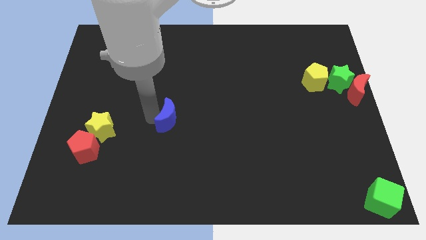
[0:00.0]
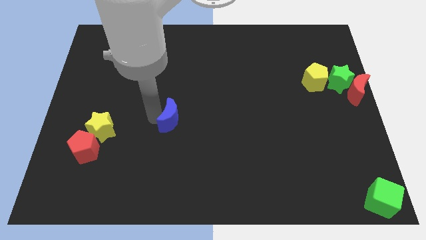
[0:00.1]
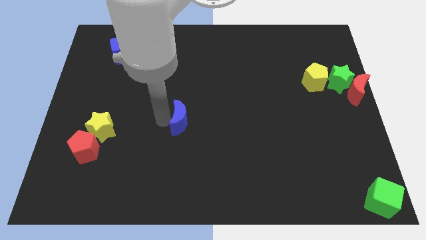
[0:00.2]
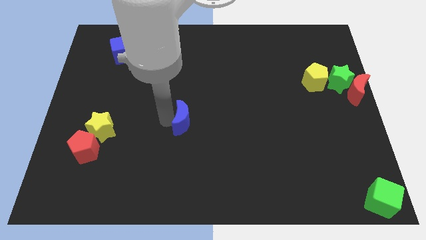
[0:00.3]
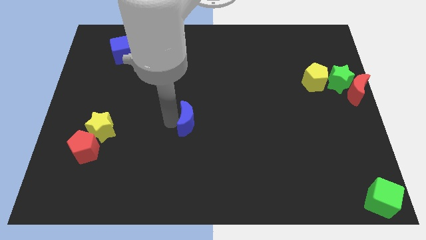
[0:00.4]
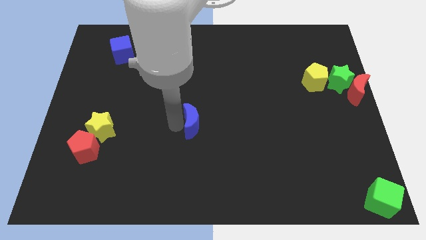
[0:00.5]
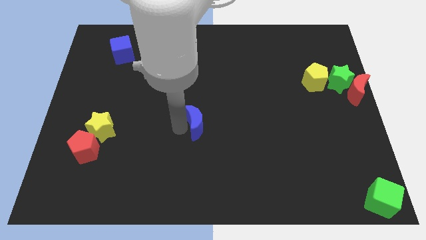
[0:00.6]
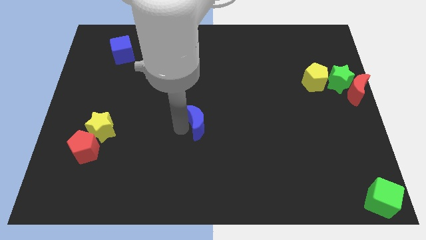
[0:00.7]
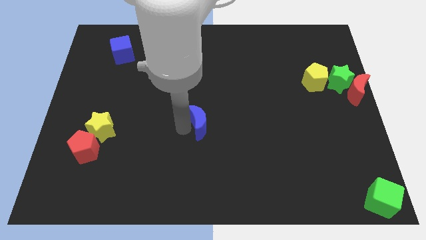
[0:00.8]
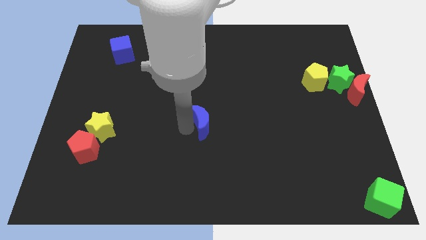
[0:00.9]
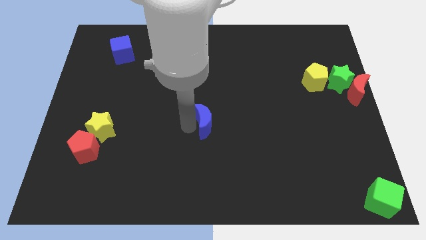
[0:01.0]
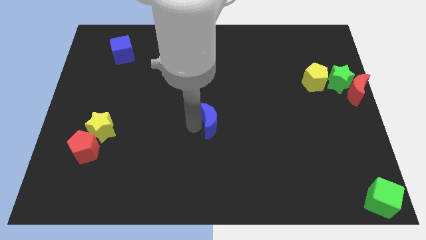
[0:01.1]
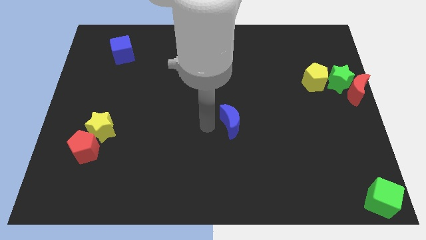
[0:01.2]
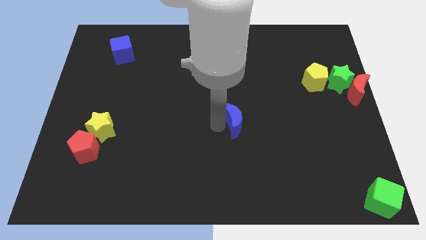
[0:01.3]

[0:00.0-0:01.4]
place the blue moon at the center of the board

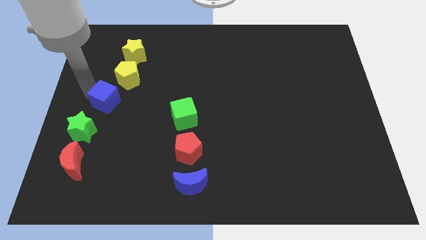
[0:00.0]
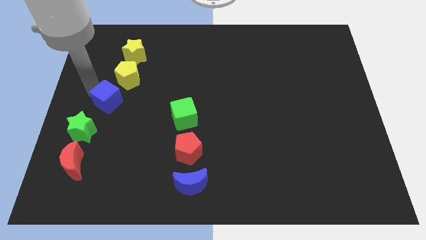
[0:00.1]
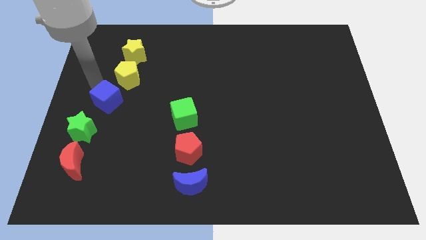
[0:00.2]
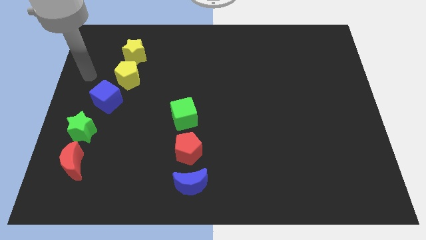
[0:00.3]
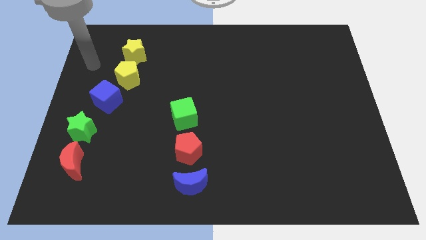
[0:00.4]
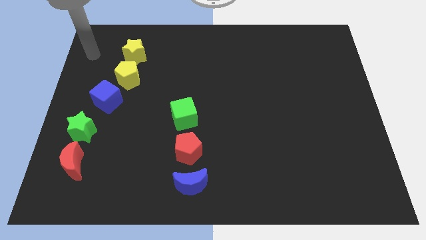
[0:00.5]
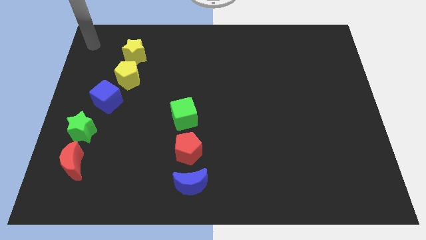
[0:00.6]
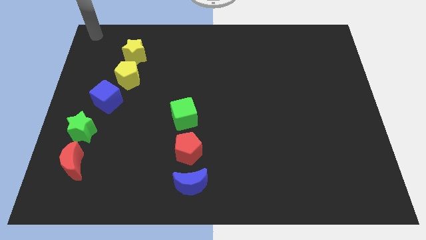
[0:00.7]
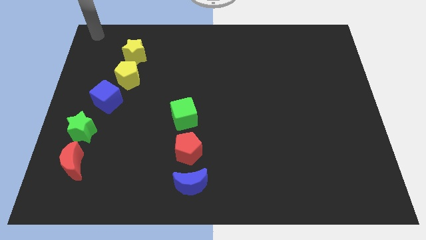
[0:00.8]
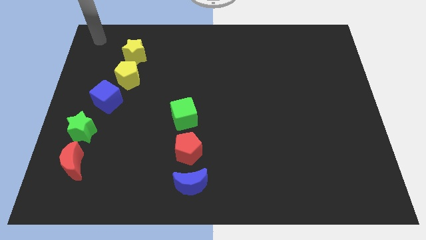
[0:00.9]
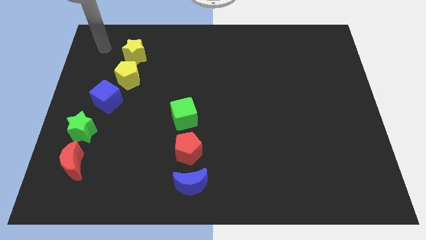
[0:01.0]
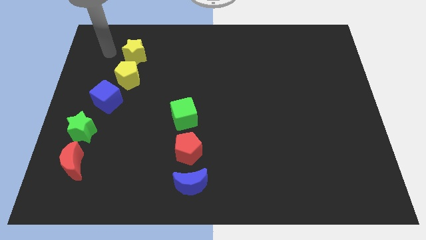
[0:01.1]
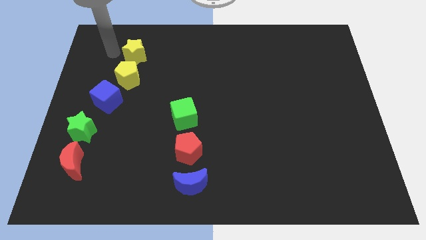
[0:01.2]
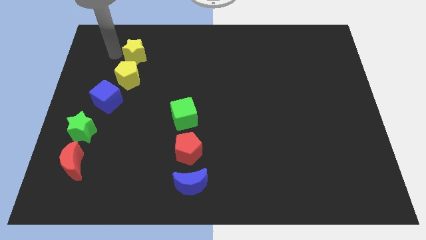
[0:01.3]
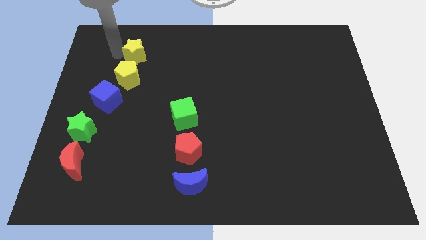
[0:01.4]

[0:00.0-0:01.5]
move your arm away from the blue cube

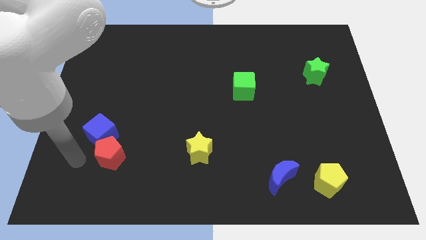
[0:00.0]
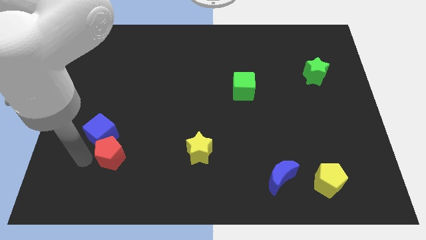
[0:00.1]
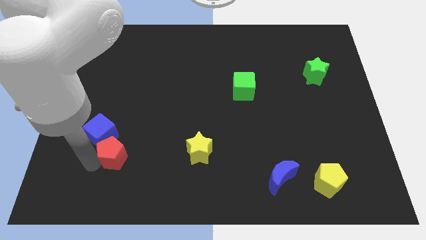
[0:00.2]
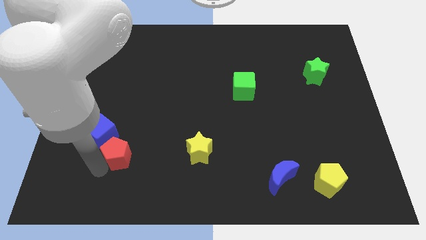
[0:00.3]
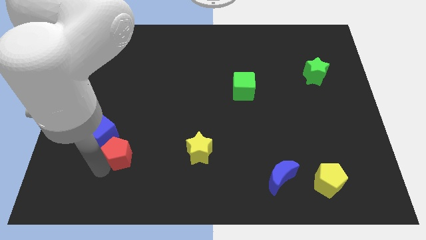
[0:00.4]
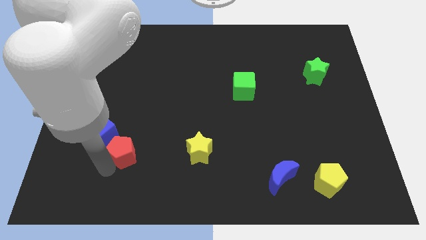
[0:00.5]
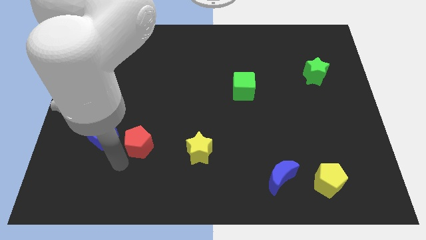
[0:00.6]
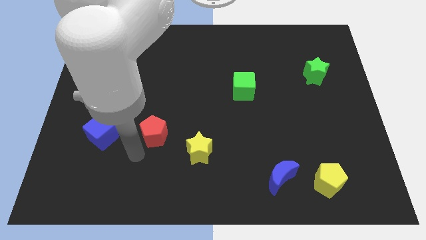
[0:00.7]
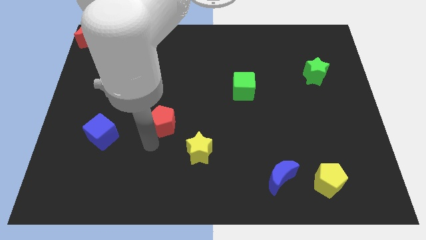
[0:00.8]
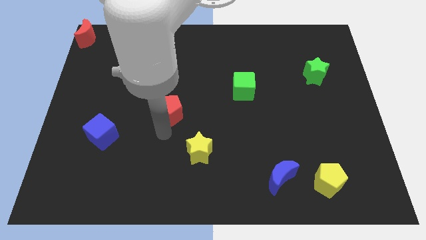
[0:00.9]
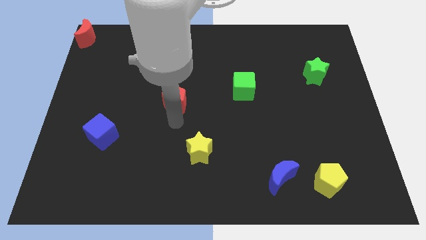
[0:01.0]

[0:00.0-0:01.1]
place the red pentagon in between green cube and blue cube

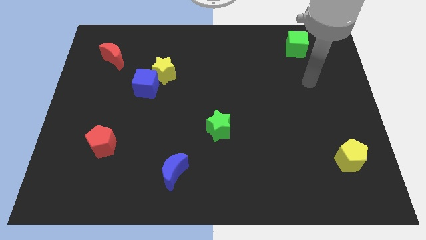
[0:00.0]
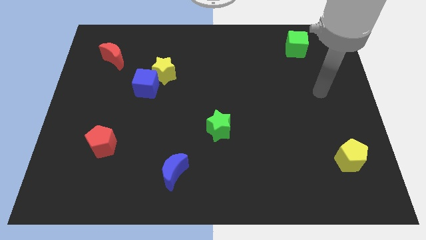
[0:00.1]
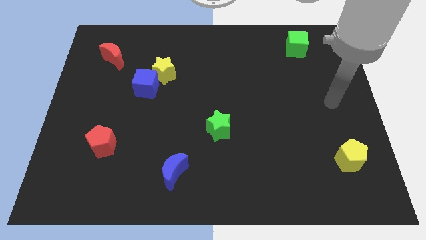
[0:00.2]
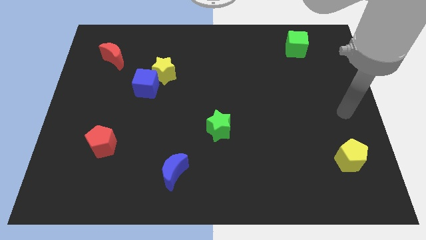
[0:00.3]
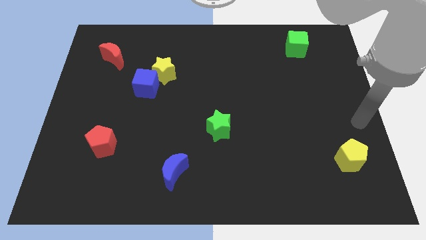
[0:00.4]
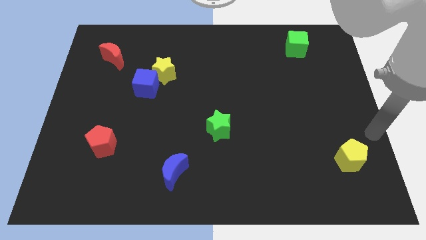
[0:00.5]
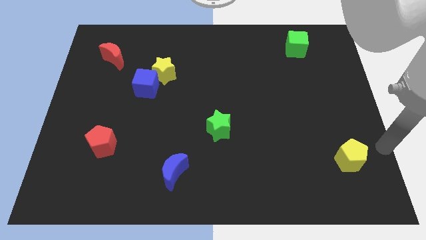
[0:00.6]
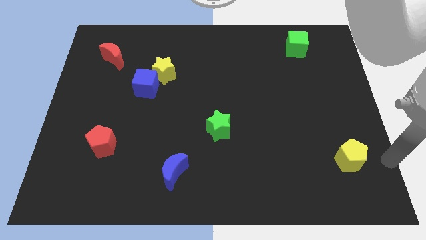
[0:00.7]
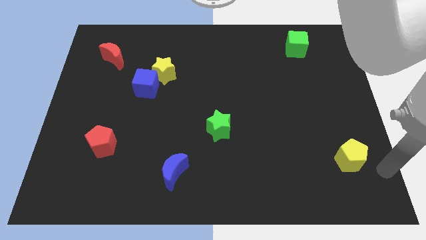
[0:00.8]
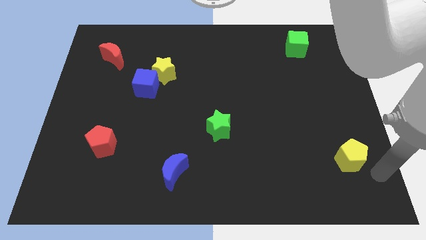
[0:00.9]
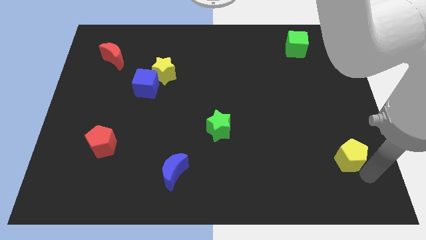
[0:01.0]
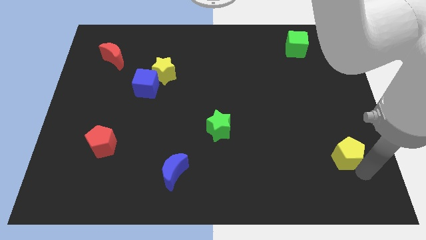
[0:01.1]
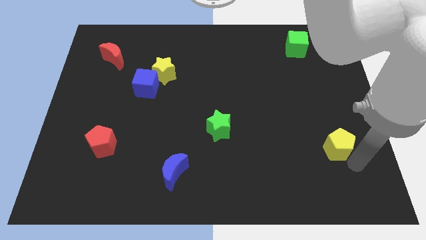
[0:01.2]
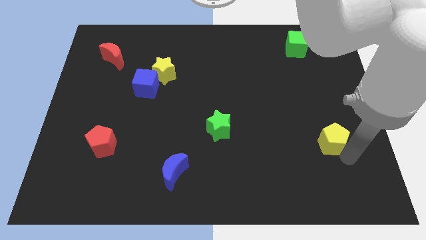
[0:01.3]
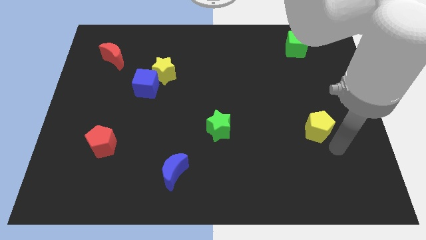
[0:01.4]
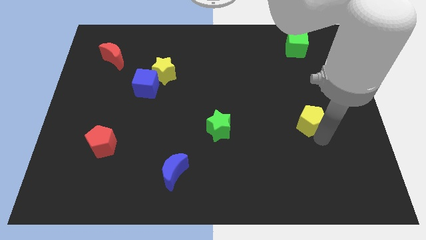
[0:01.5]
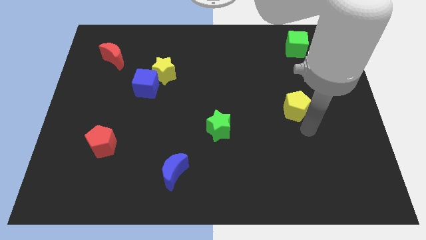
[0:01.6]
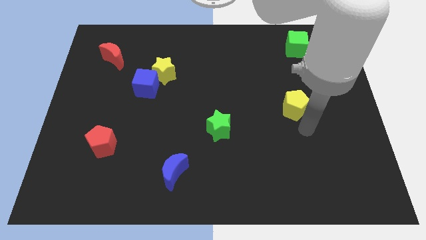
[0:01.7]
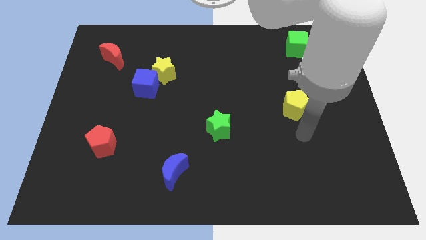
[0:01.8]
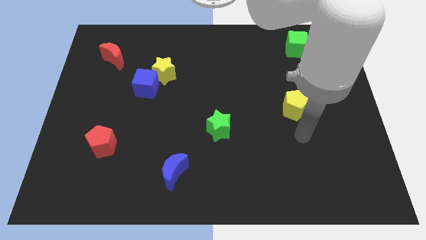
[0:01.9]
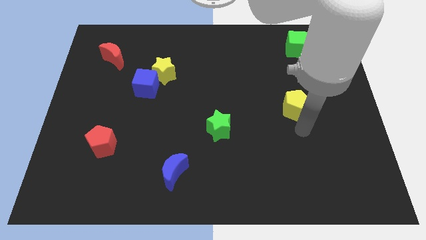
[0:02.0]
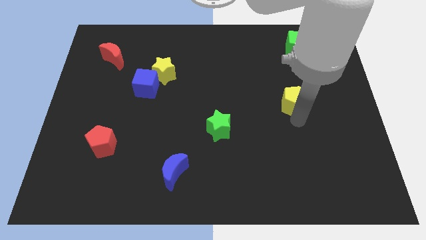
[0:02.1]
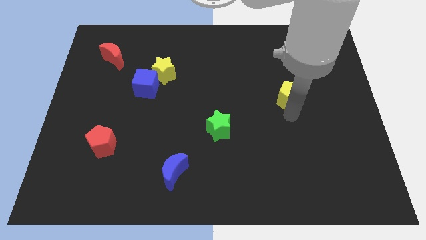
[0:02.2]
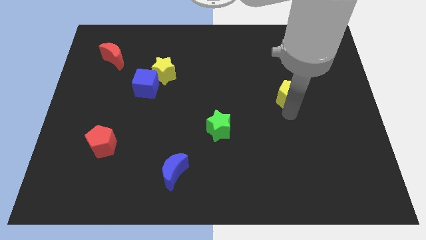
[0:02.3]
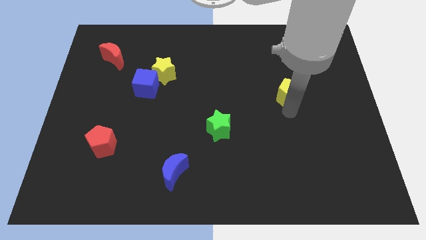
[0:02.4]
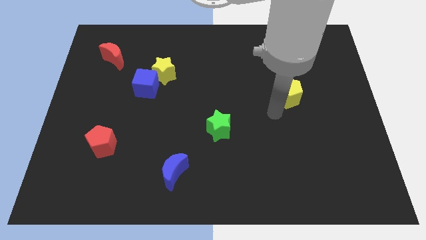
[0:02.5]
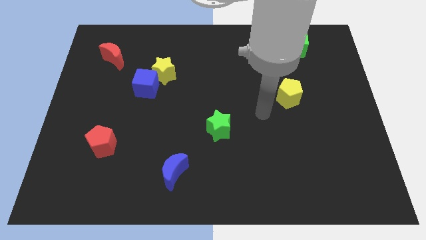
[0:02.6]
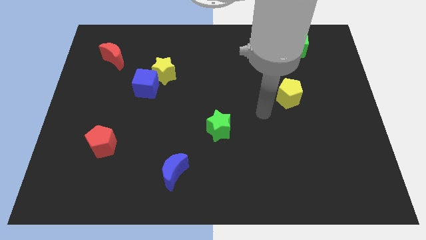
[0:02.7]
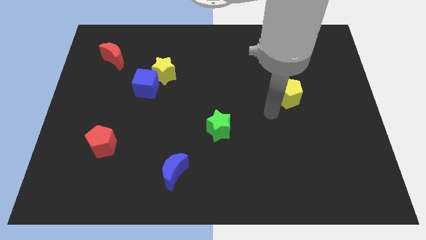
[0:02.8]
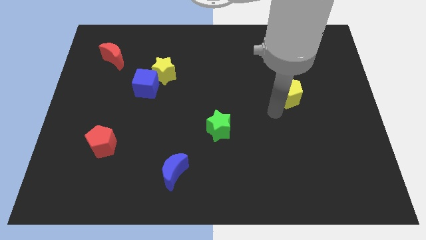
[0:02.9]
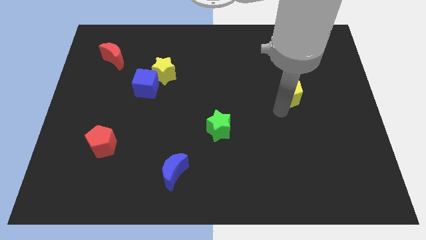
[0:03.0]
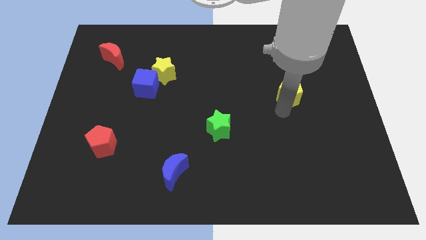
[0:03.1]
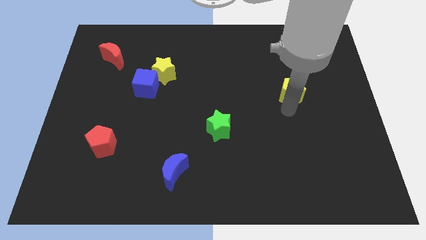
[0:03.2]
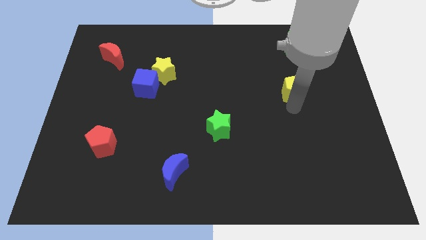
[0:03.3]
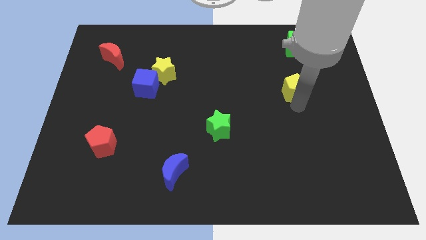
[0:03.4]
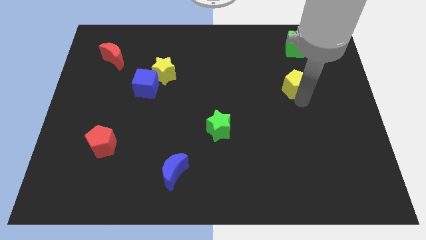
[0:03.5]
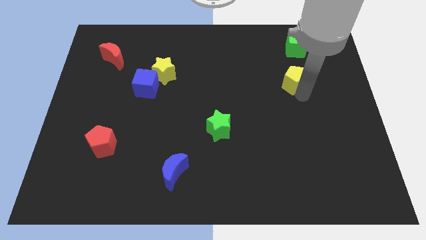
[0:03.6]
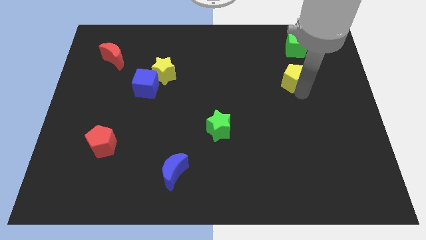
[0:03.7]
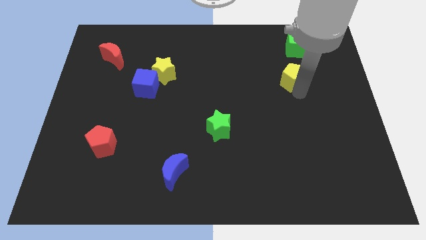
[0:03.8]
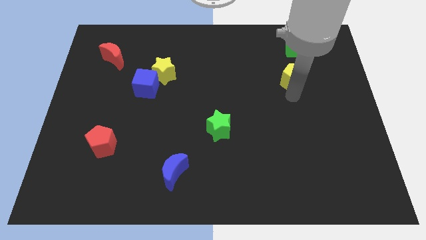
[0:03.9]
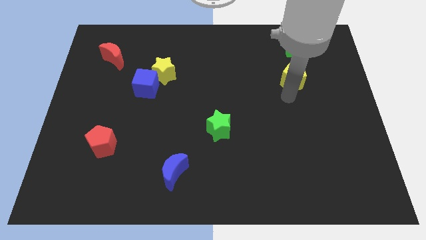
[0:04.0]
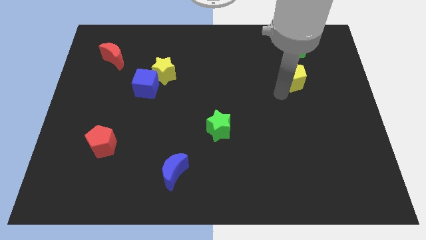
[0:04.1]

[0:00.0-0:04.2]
move the yellow pentagon towards green cube

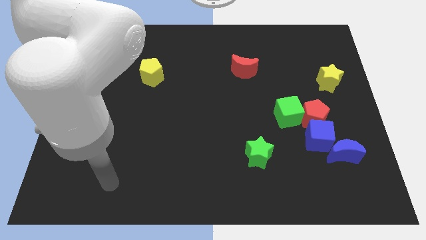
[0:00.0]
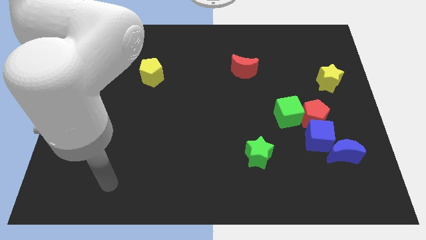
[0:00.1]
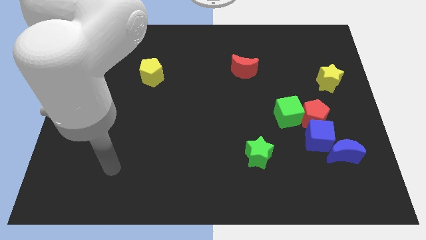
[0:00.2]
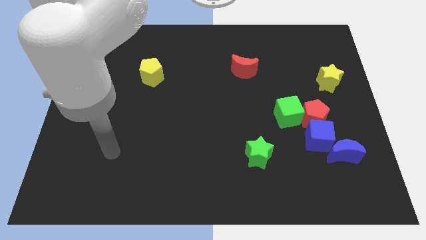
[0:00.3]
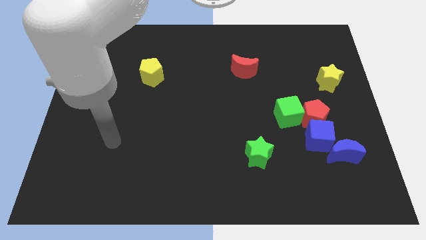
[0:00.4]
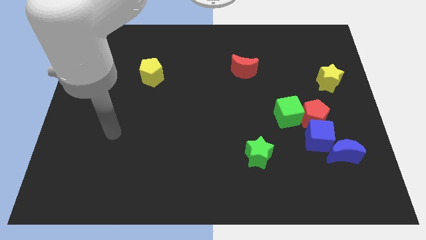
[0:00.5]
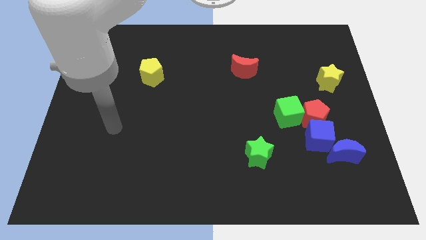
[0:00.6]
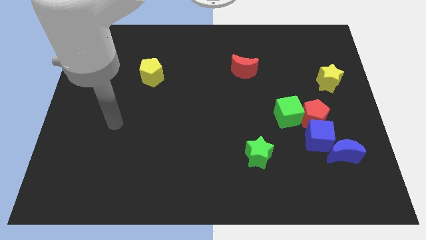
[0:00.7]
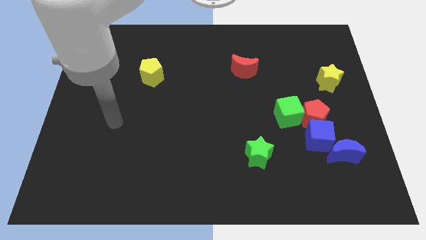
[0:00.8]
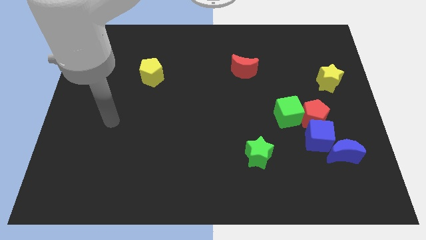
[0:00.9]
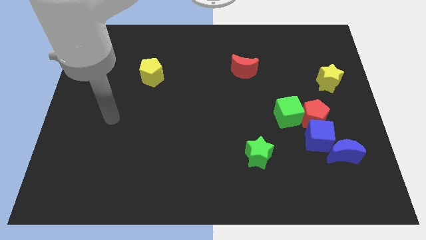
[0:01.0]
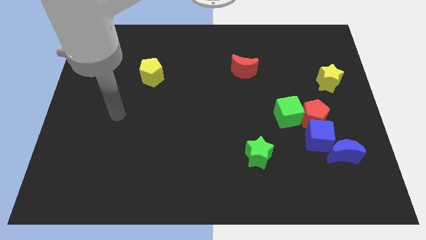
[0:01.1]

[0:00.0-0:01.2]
move your arm slightly to the top of the board
